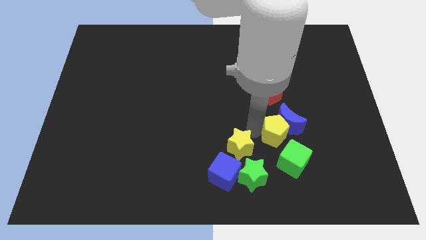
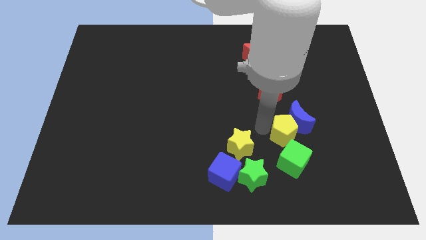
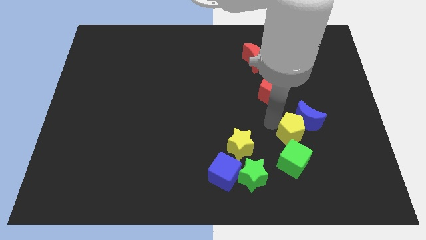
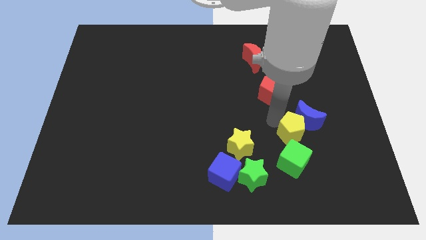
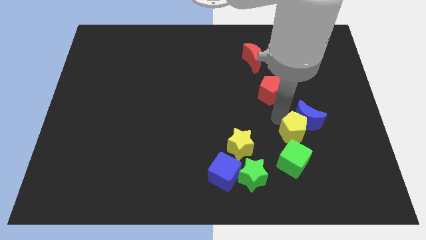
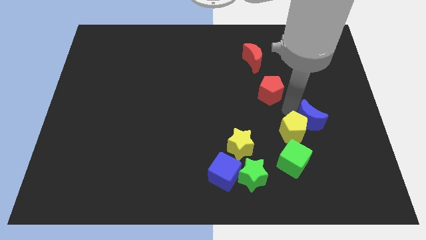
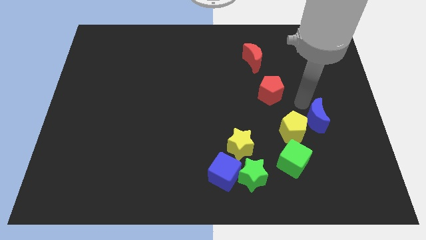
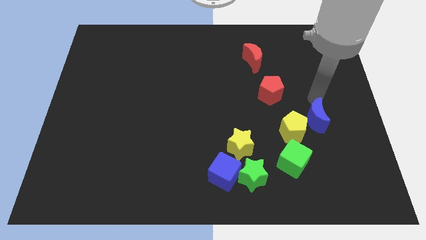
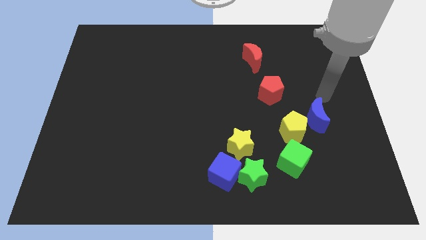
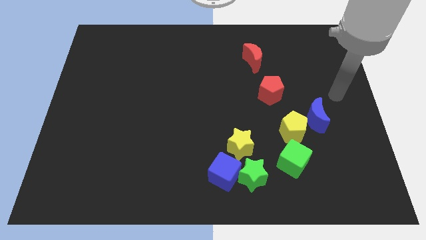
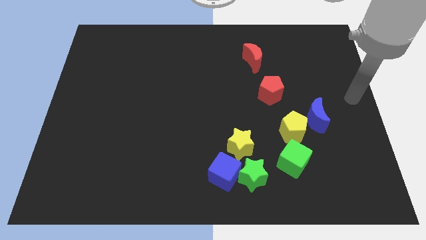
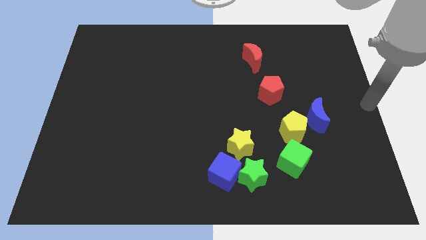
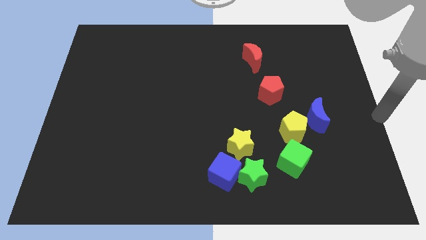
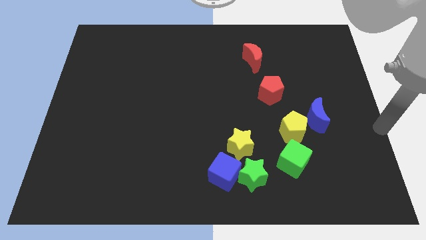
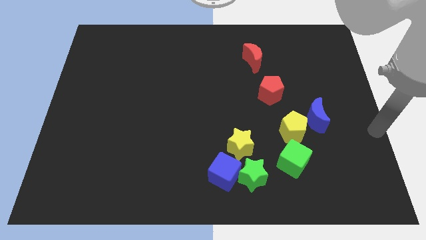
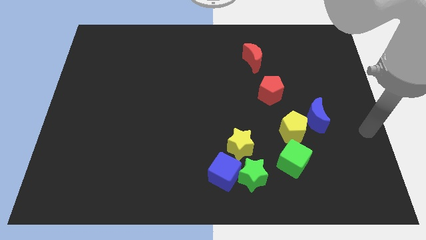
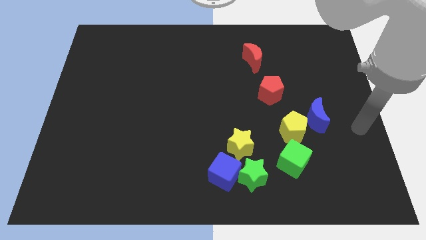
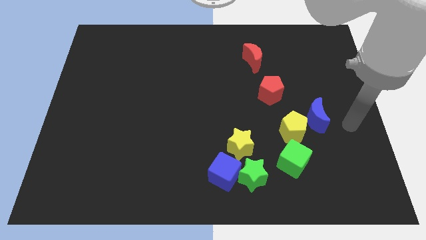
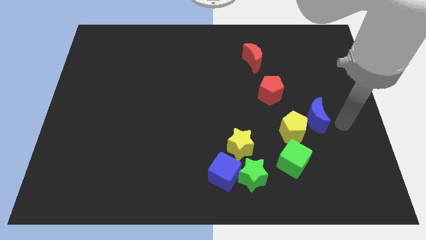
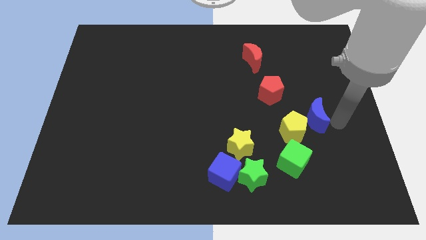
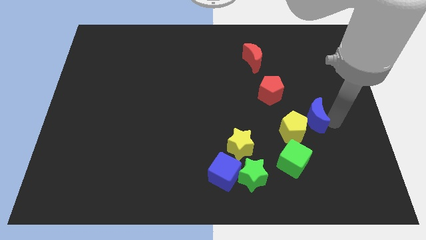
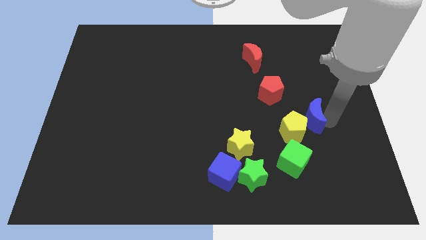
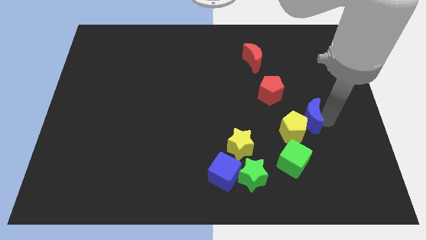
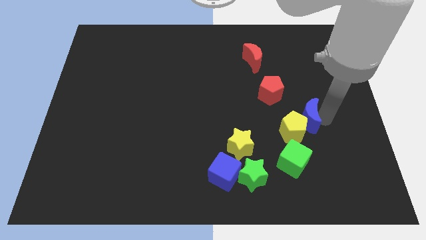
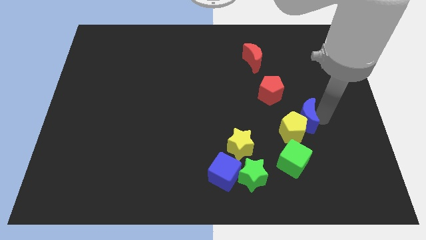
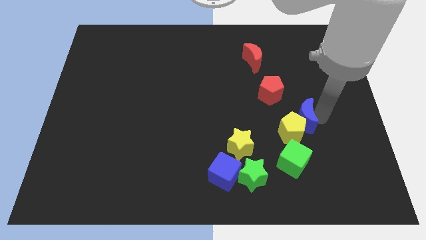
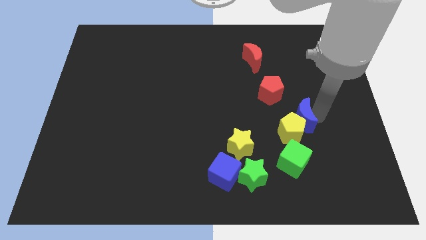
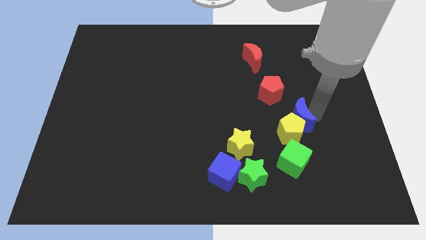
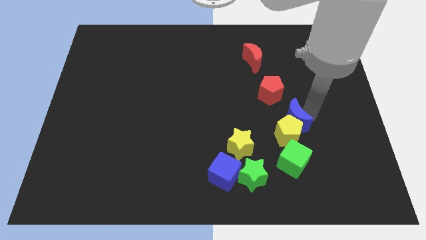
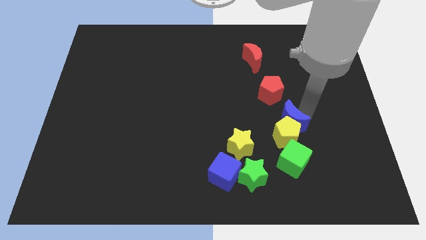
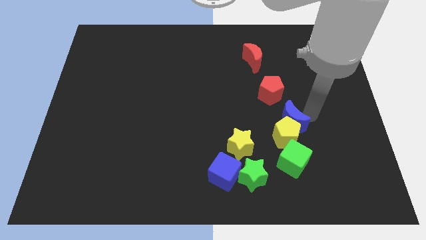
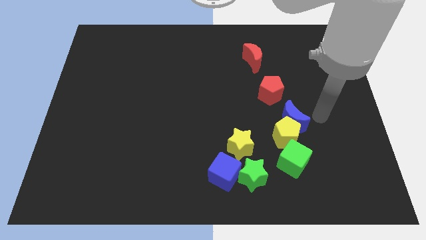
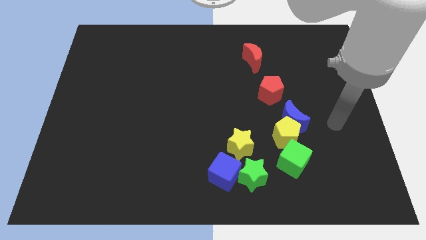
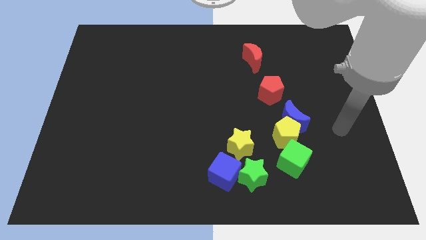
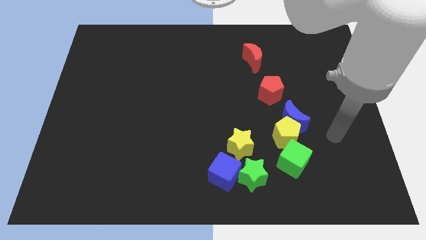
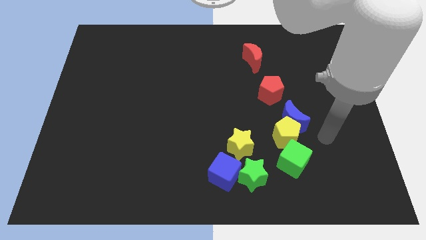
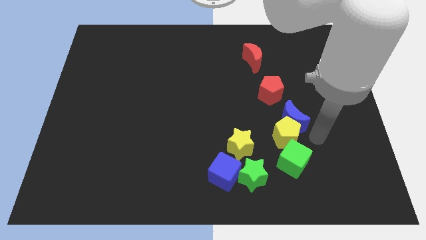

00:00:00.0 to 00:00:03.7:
move blue moon into yellow pentagon

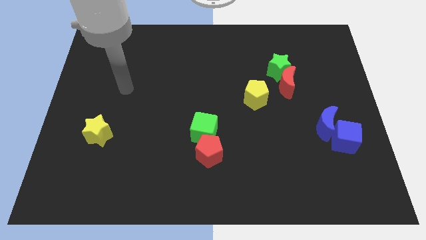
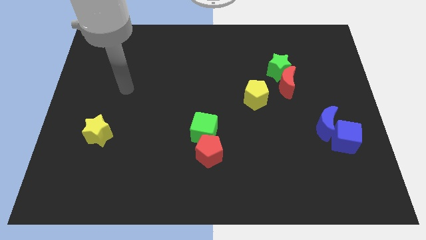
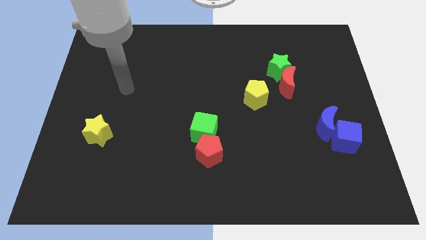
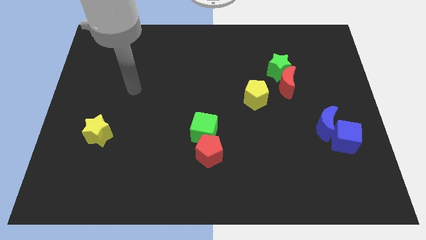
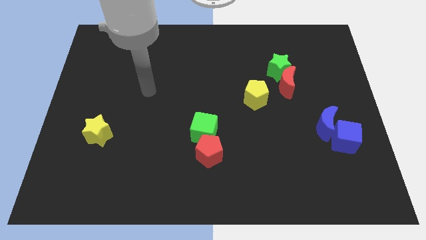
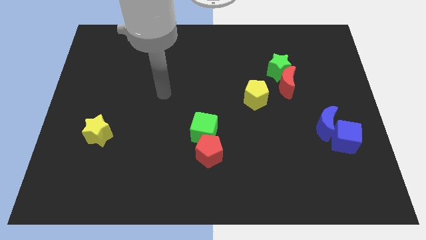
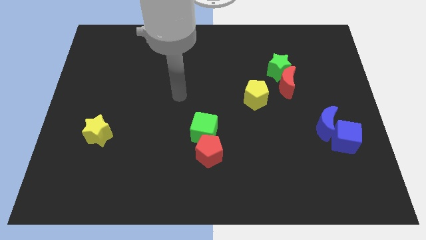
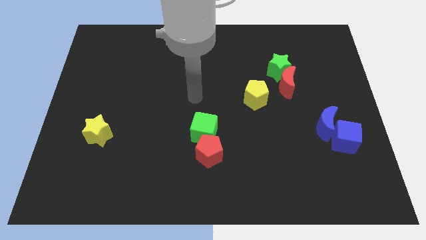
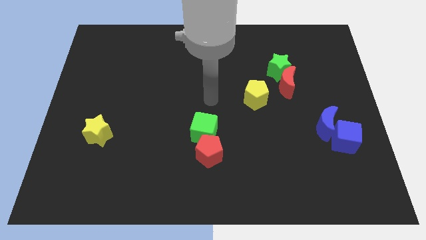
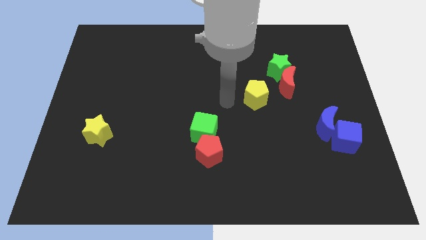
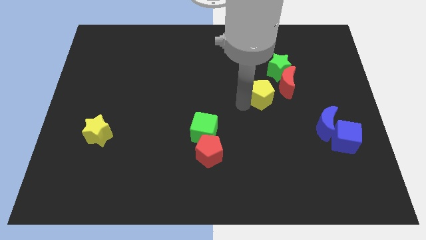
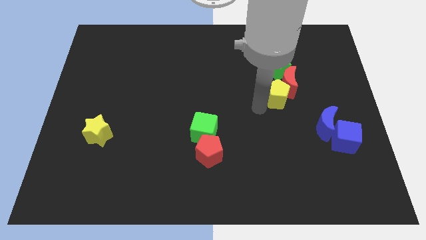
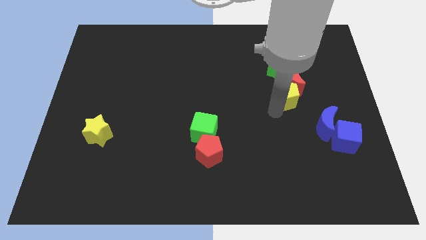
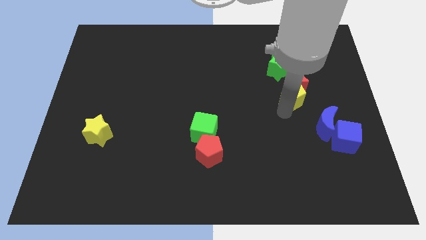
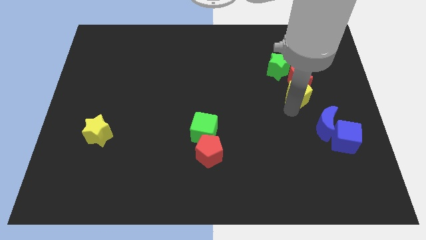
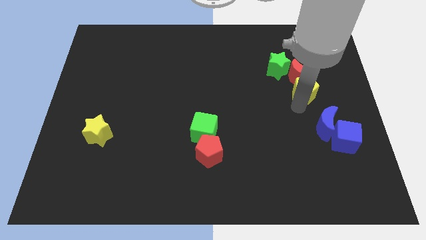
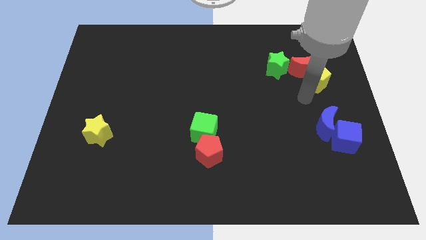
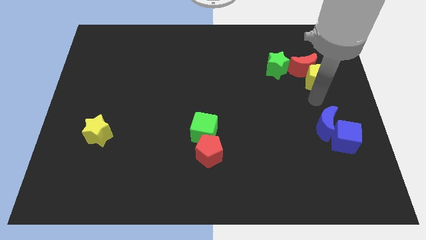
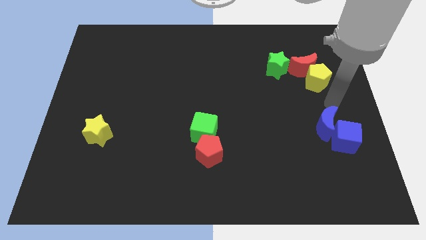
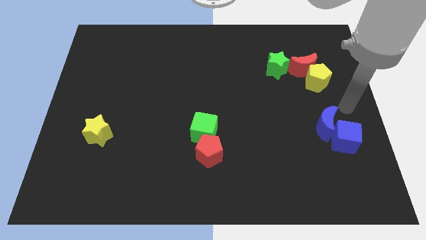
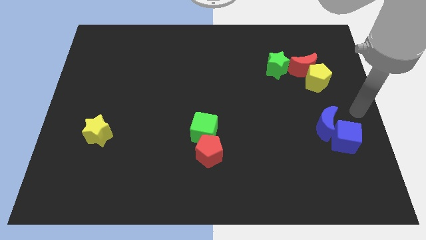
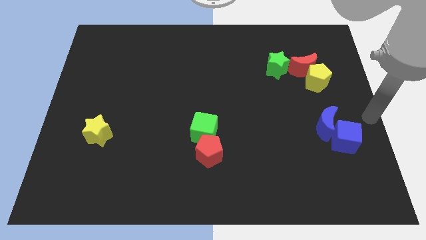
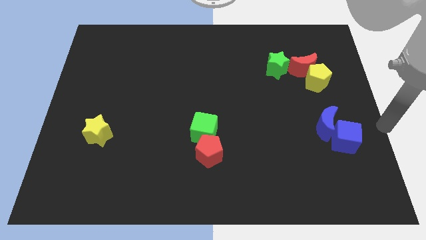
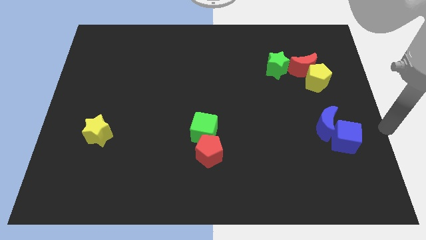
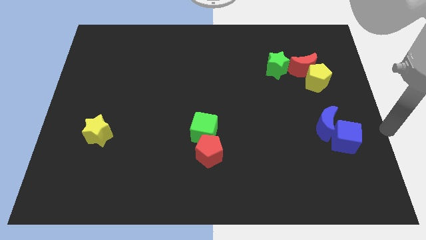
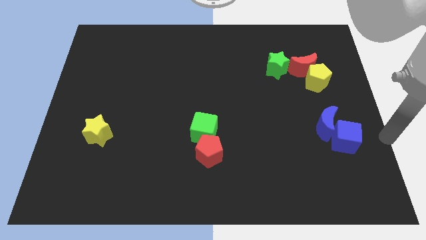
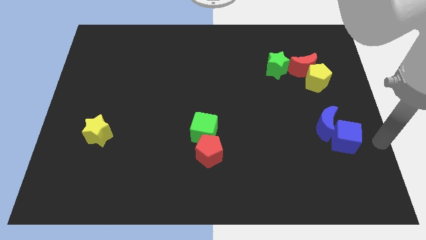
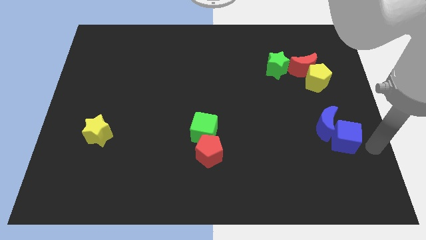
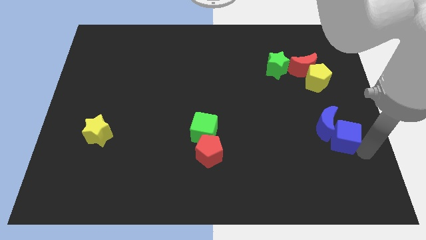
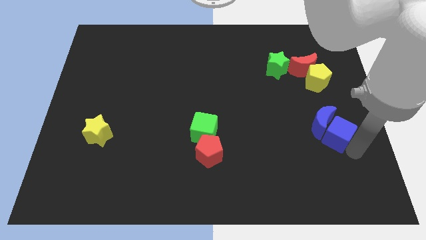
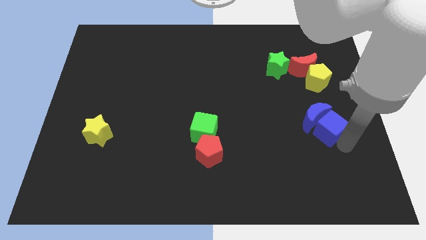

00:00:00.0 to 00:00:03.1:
push the blue cube into the blue moon

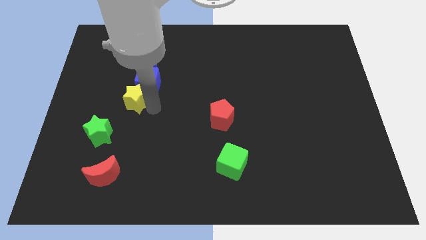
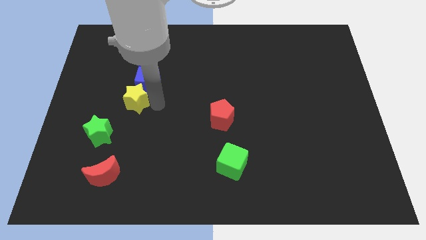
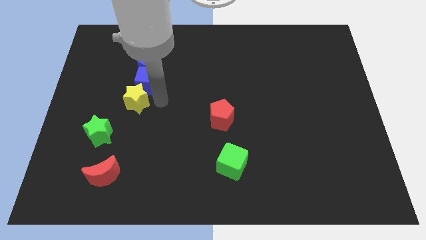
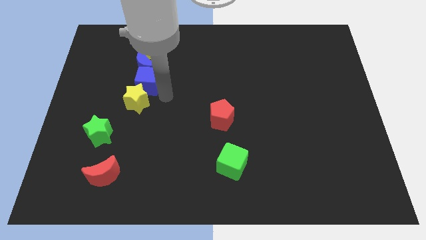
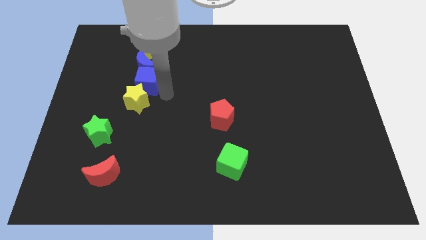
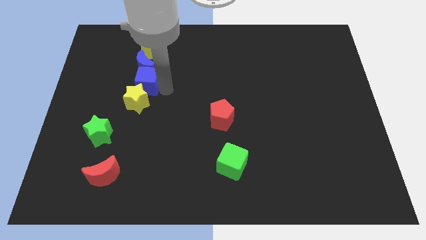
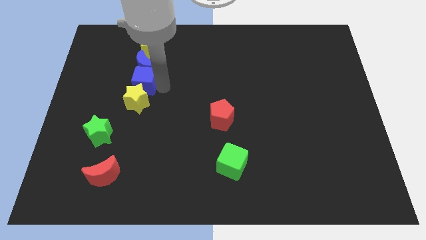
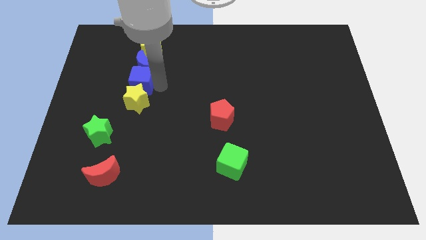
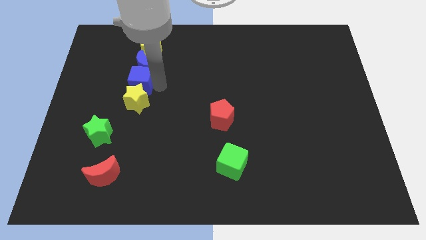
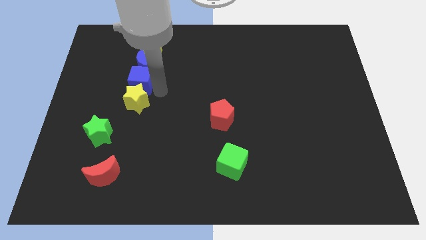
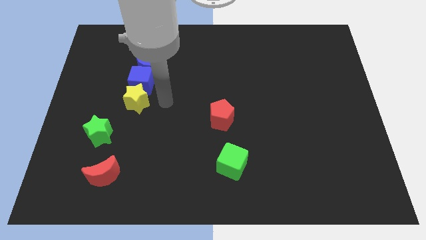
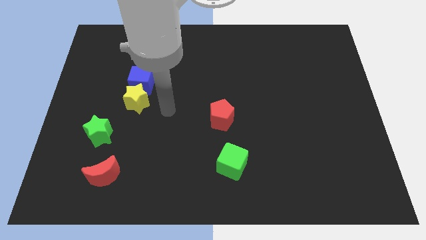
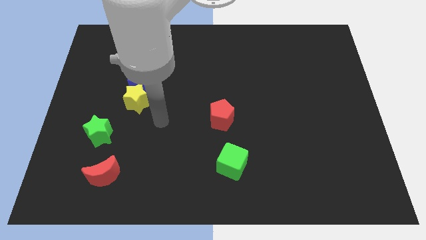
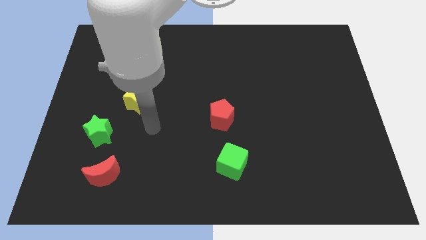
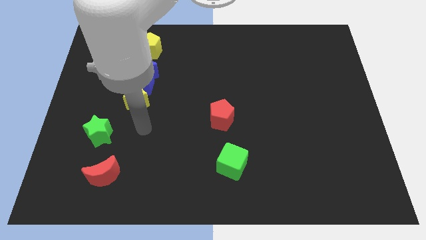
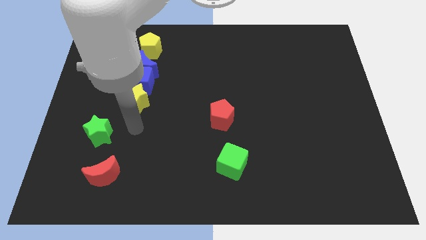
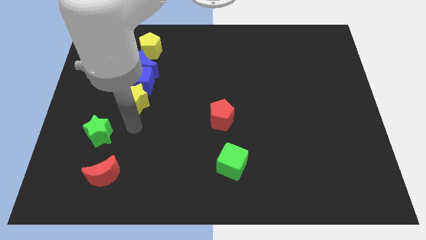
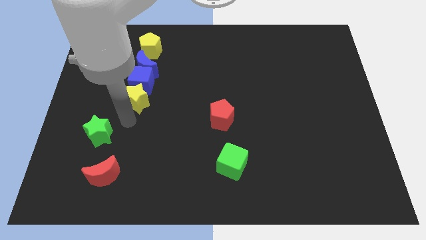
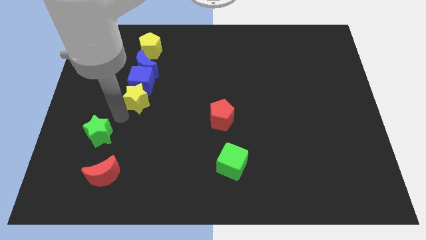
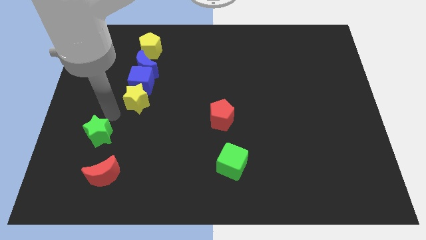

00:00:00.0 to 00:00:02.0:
slightly push the blue cube
